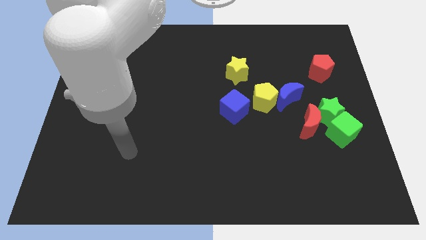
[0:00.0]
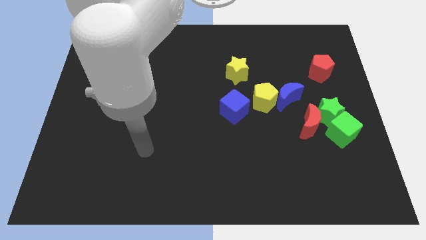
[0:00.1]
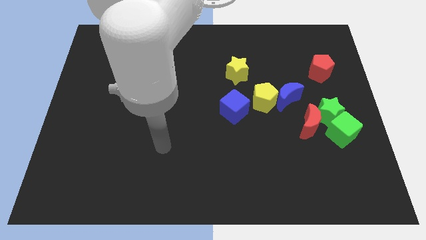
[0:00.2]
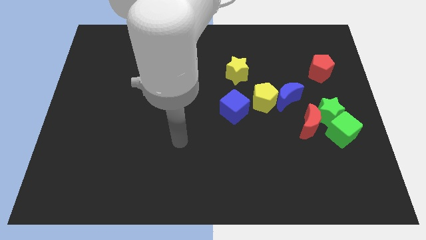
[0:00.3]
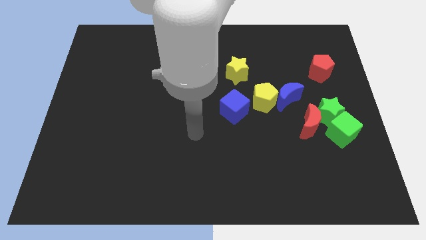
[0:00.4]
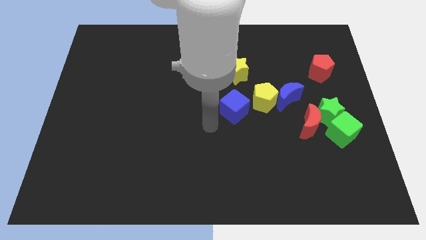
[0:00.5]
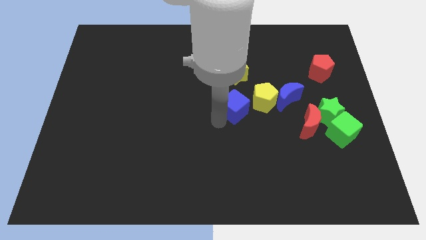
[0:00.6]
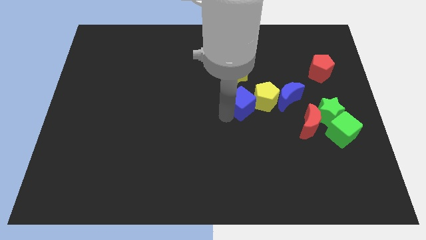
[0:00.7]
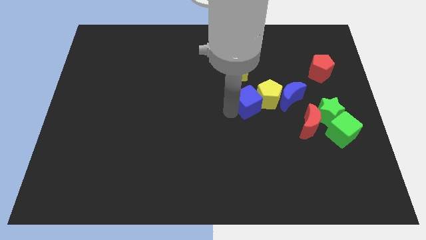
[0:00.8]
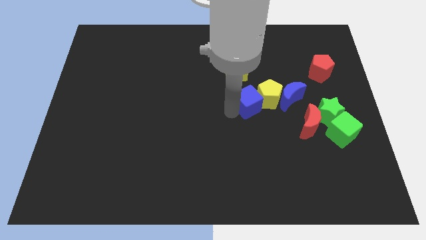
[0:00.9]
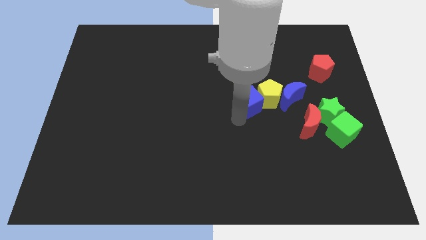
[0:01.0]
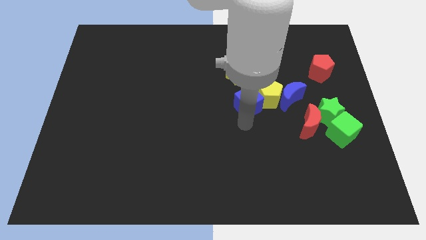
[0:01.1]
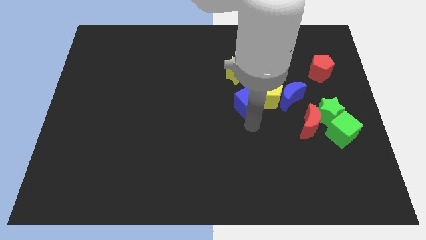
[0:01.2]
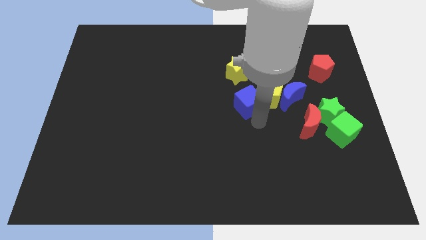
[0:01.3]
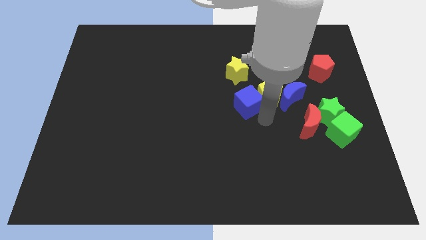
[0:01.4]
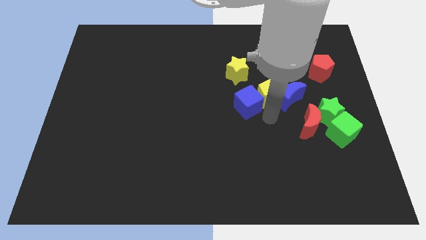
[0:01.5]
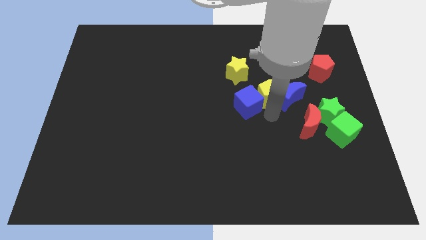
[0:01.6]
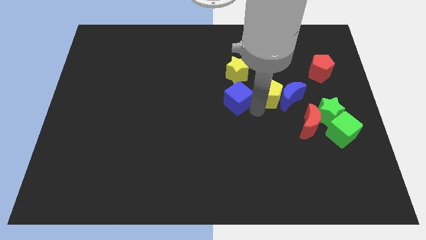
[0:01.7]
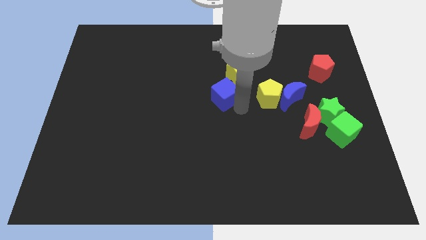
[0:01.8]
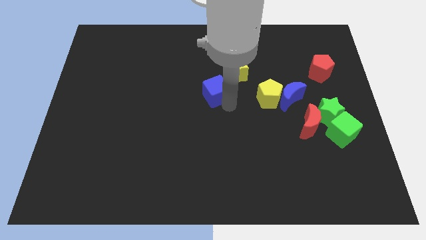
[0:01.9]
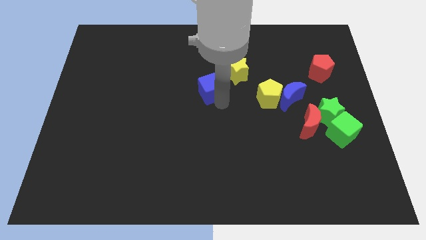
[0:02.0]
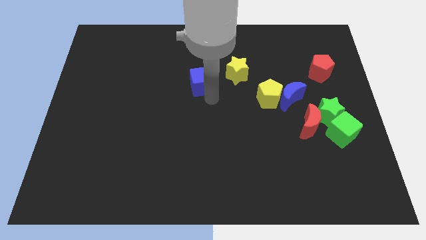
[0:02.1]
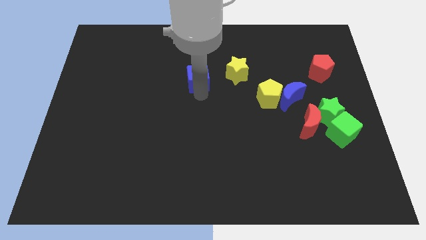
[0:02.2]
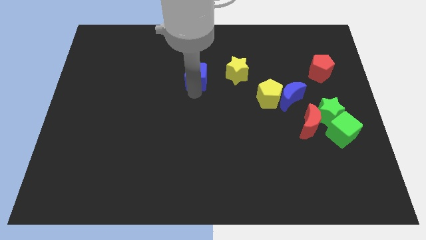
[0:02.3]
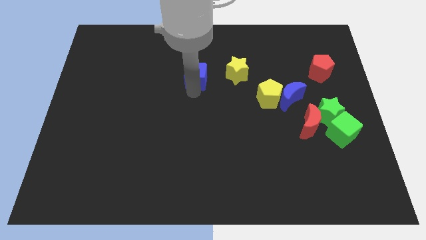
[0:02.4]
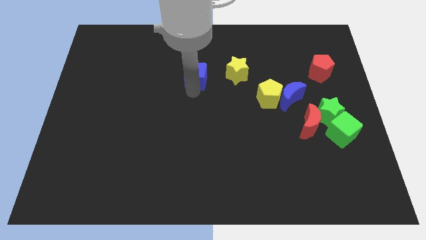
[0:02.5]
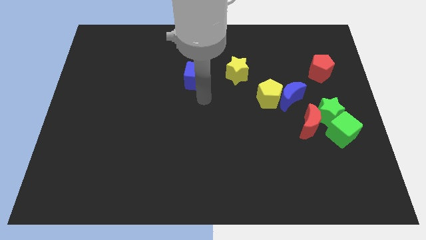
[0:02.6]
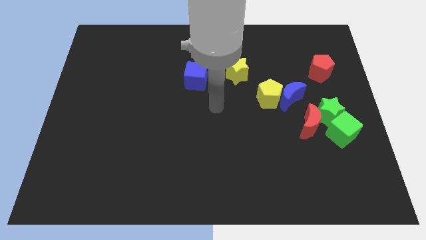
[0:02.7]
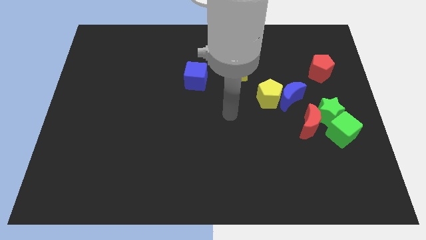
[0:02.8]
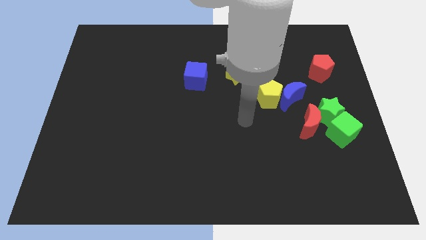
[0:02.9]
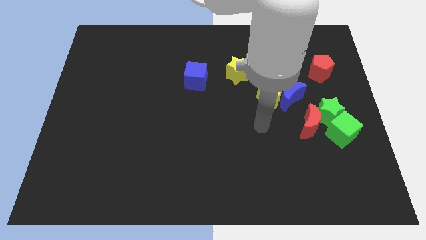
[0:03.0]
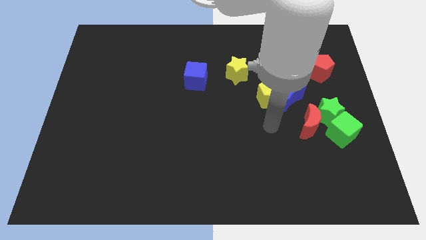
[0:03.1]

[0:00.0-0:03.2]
put the blue cube parallel to the left of the yellow star

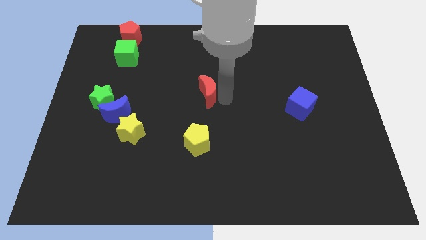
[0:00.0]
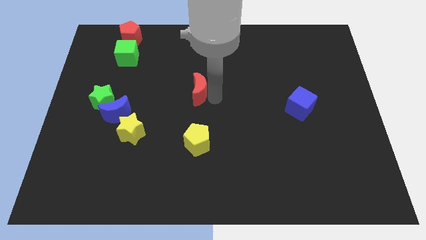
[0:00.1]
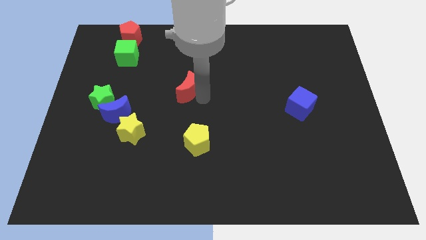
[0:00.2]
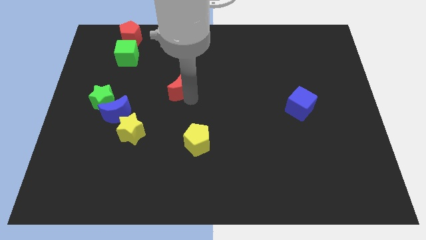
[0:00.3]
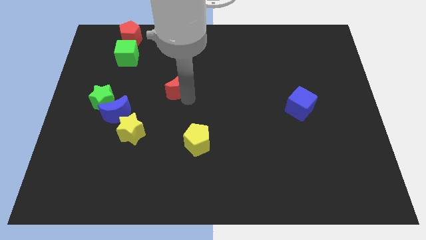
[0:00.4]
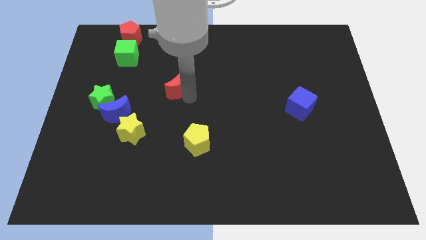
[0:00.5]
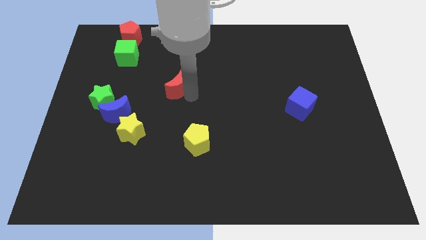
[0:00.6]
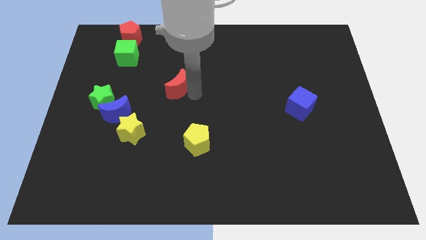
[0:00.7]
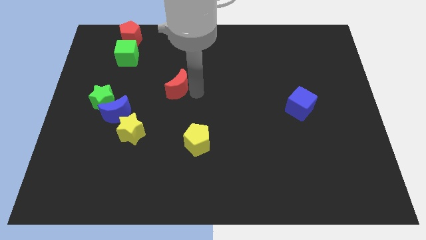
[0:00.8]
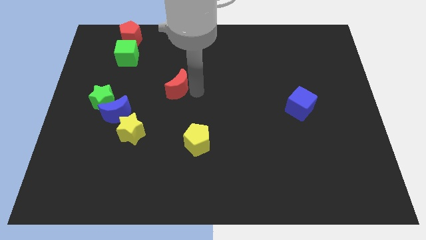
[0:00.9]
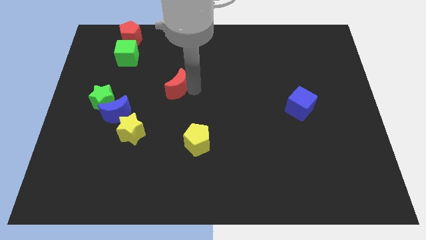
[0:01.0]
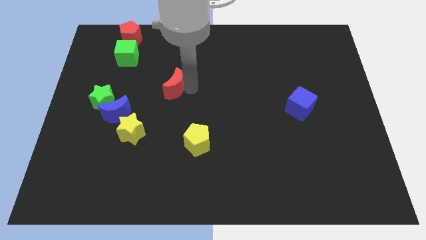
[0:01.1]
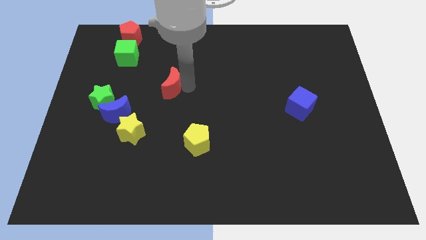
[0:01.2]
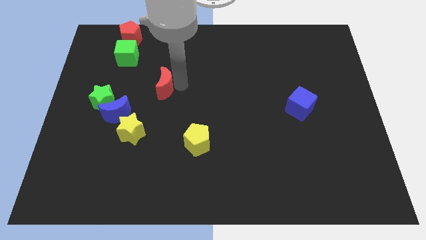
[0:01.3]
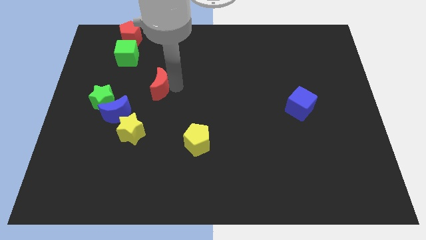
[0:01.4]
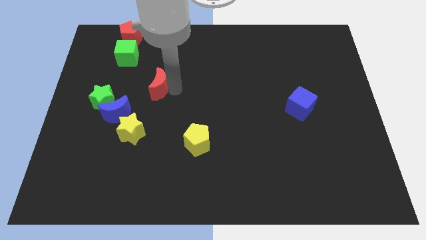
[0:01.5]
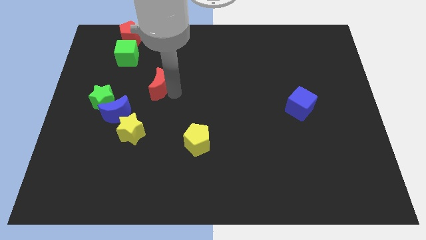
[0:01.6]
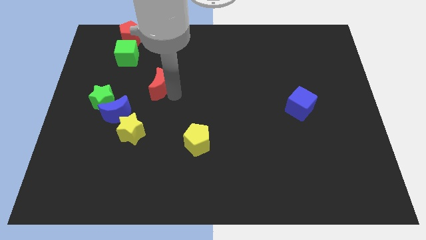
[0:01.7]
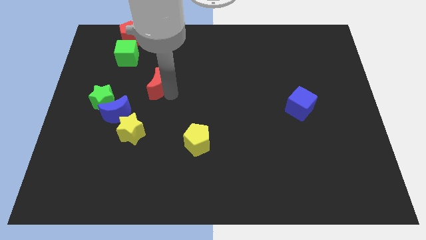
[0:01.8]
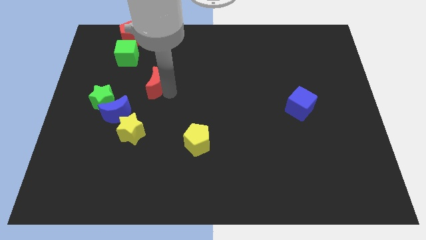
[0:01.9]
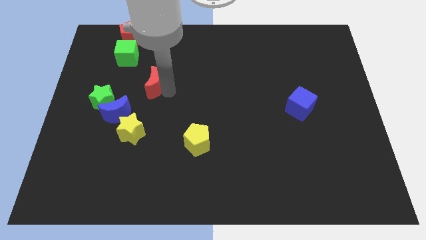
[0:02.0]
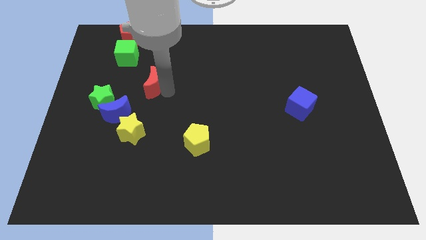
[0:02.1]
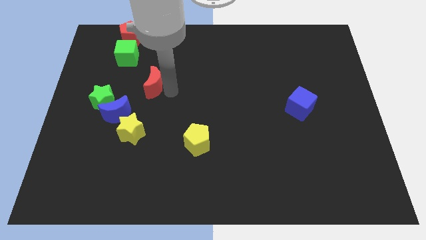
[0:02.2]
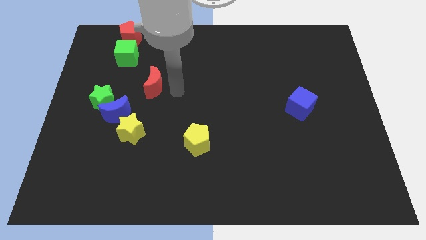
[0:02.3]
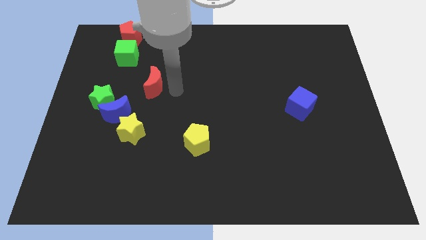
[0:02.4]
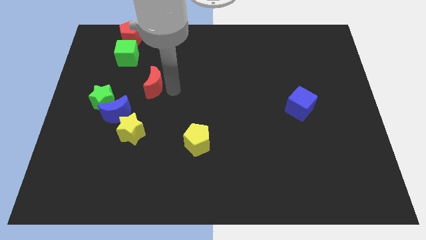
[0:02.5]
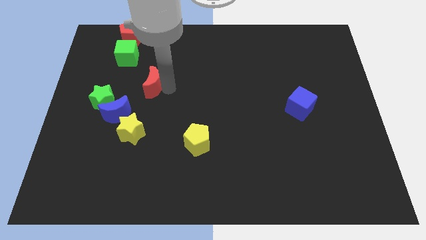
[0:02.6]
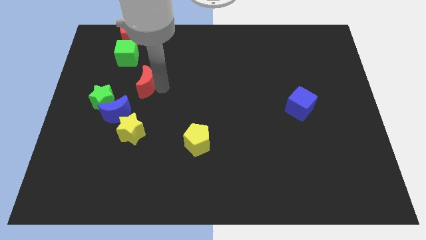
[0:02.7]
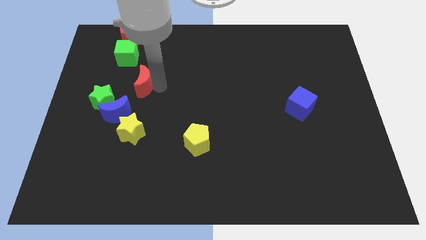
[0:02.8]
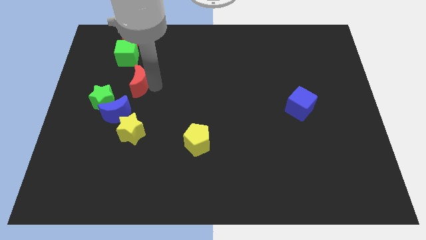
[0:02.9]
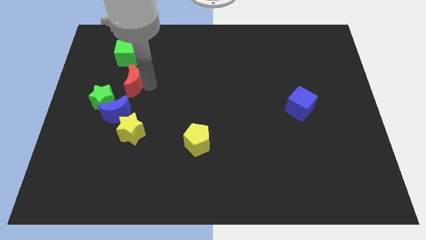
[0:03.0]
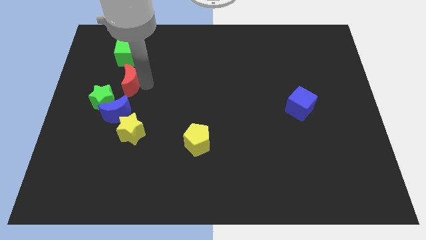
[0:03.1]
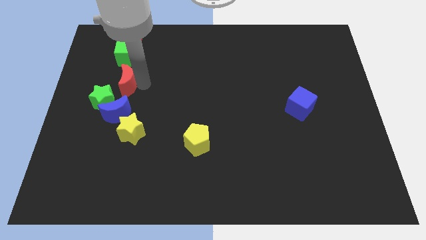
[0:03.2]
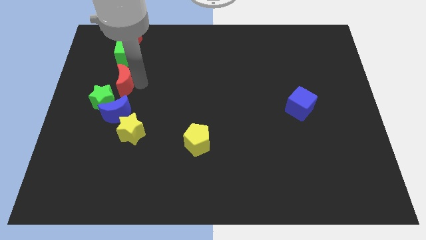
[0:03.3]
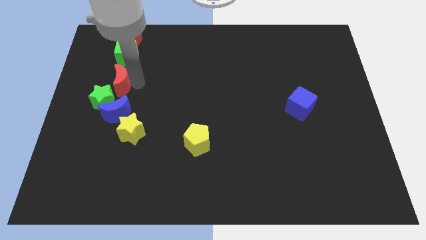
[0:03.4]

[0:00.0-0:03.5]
place red crescent in between the green cube and green star

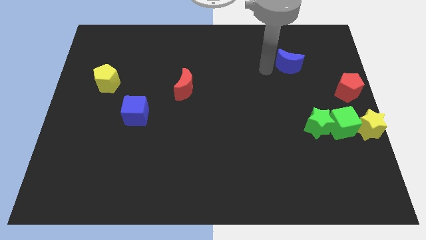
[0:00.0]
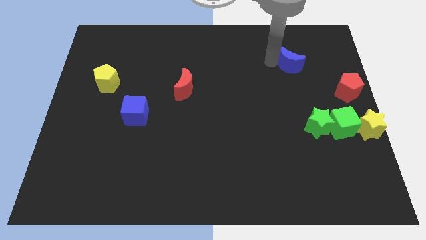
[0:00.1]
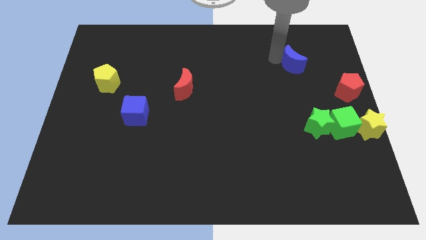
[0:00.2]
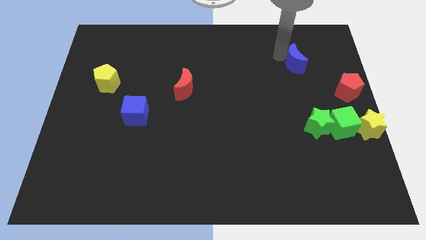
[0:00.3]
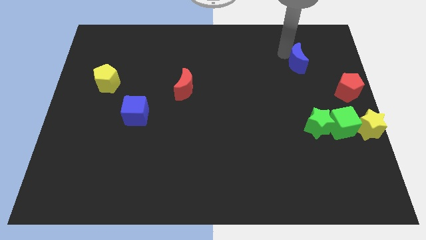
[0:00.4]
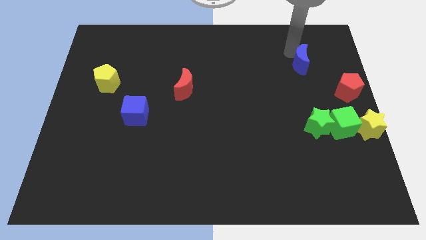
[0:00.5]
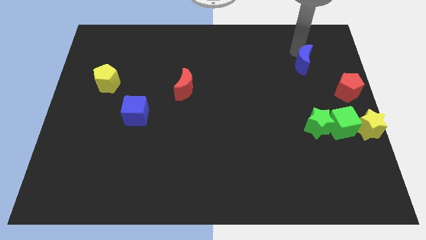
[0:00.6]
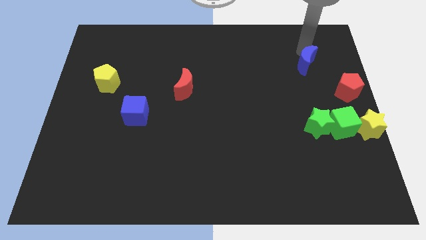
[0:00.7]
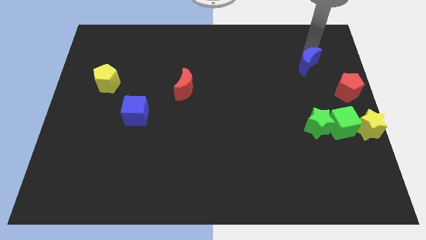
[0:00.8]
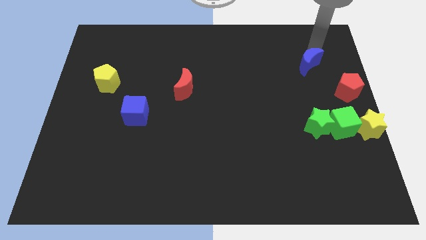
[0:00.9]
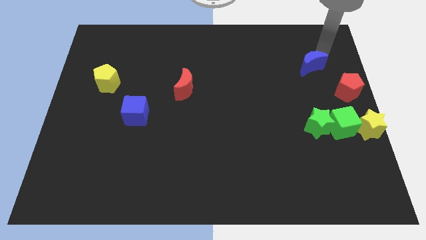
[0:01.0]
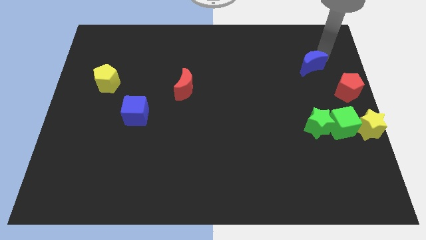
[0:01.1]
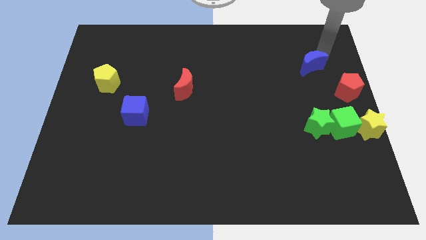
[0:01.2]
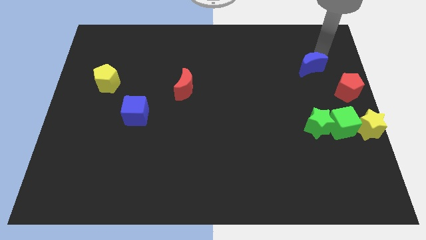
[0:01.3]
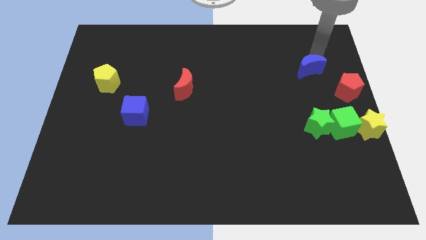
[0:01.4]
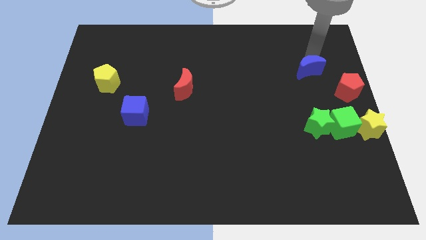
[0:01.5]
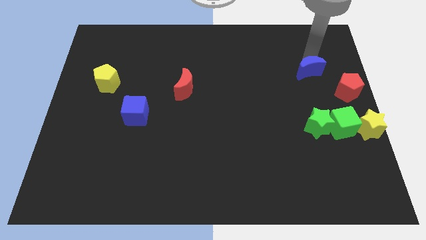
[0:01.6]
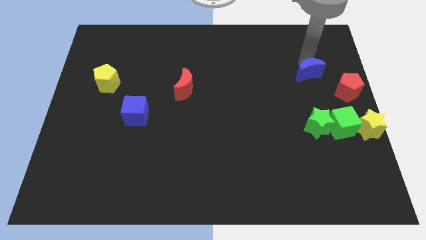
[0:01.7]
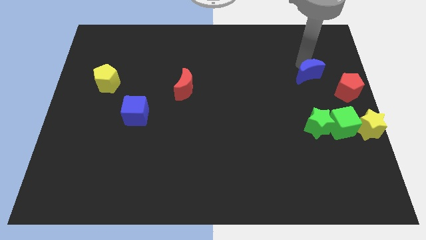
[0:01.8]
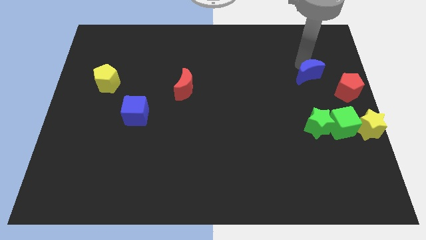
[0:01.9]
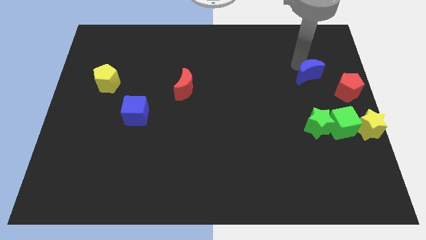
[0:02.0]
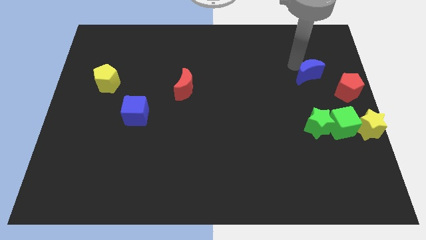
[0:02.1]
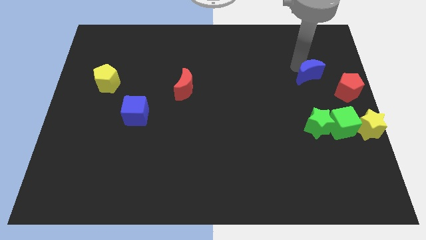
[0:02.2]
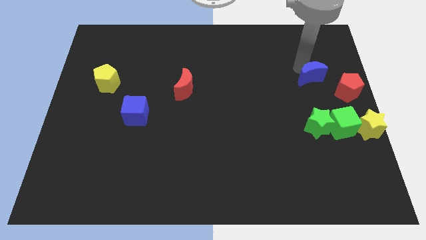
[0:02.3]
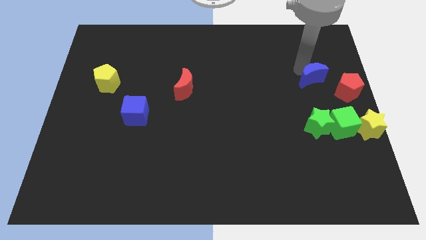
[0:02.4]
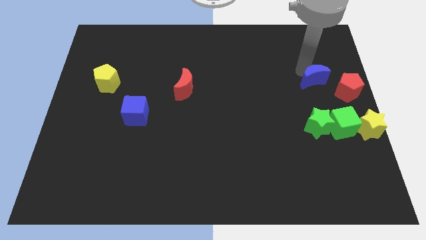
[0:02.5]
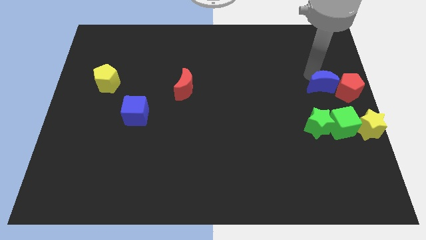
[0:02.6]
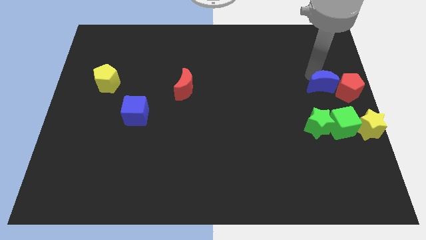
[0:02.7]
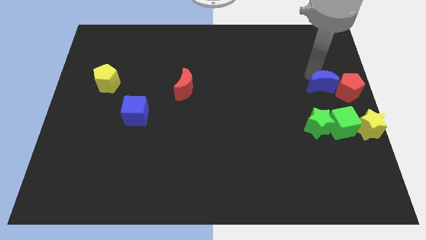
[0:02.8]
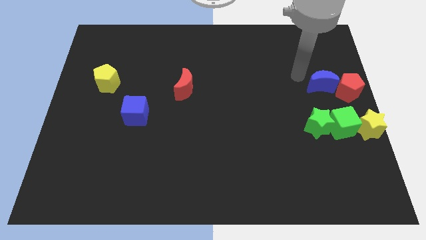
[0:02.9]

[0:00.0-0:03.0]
push the blue moon into red pentagon
